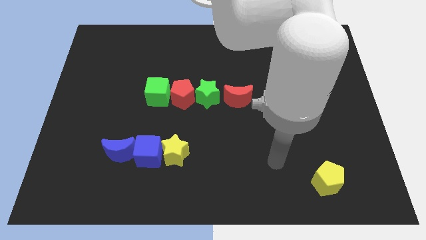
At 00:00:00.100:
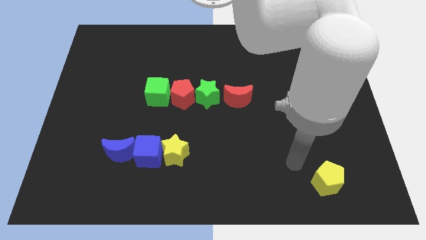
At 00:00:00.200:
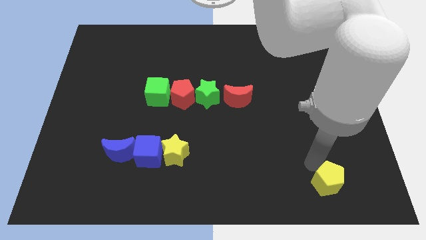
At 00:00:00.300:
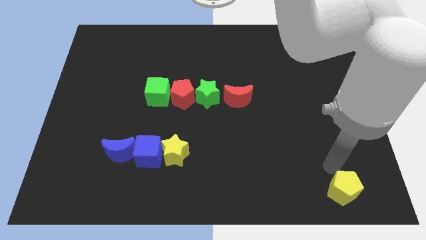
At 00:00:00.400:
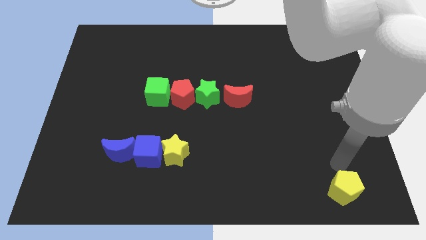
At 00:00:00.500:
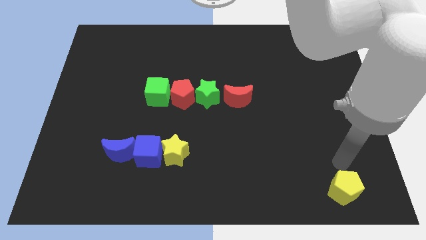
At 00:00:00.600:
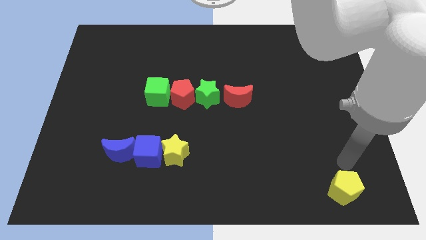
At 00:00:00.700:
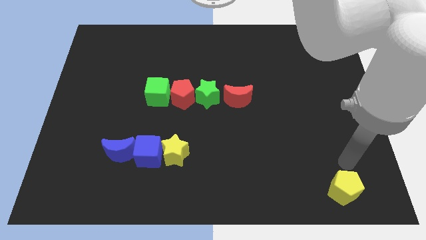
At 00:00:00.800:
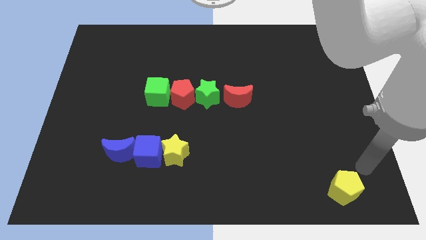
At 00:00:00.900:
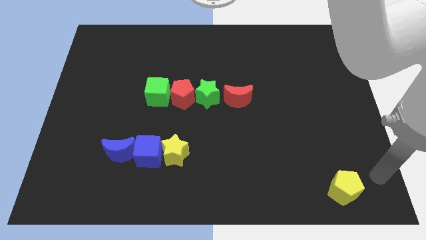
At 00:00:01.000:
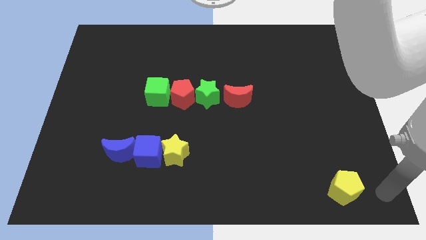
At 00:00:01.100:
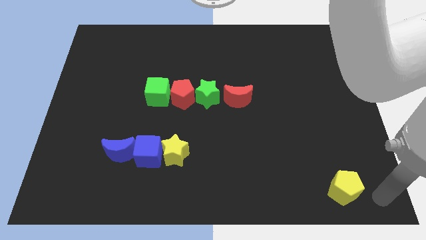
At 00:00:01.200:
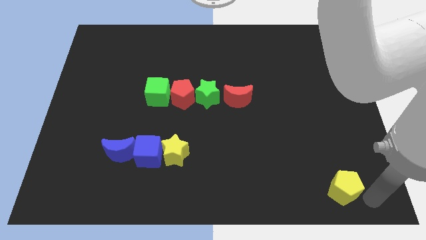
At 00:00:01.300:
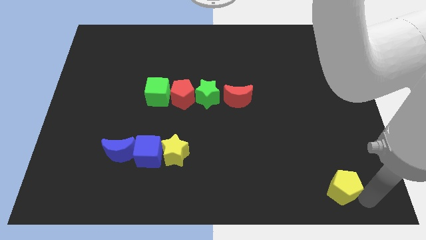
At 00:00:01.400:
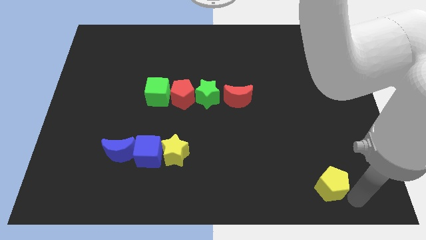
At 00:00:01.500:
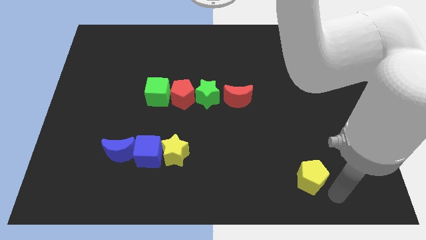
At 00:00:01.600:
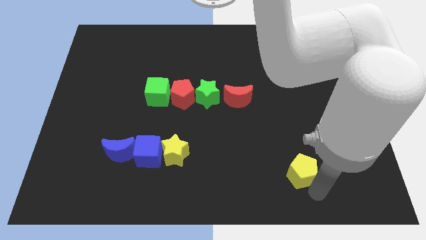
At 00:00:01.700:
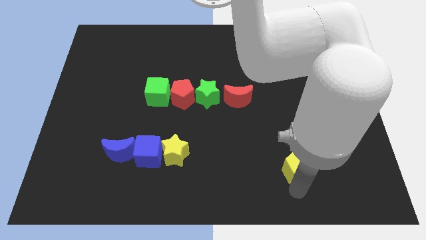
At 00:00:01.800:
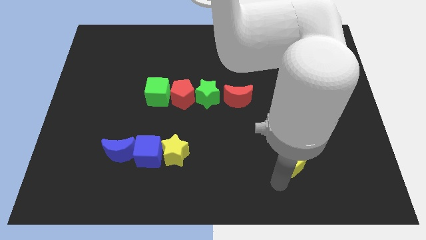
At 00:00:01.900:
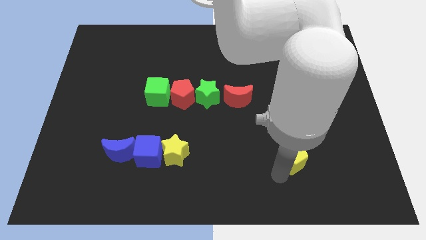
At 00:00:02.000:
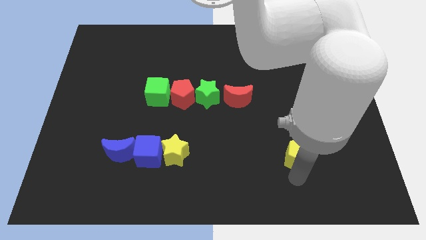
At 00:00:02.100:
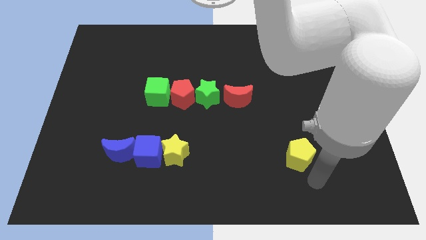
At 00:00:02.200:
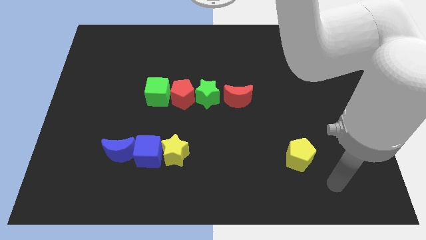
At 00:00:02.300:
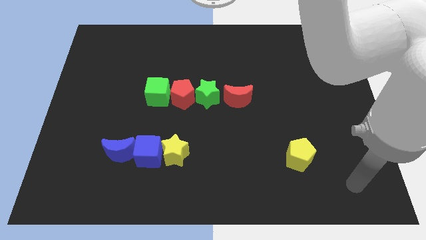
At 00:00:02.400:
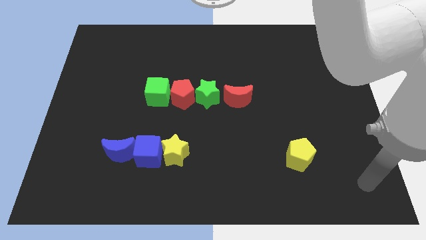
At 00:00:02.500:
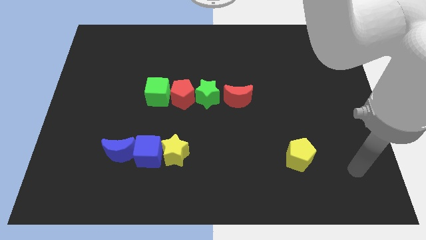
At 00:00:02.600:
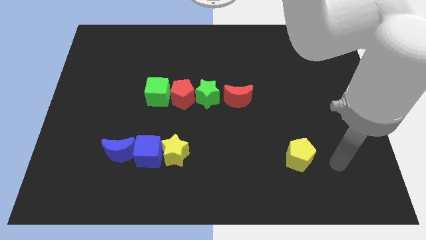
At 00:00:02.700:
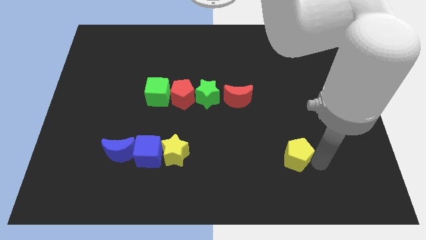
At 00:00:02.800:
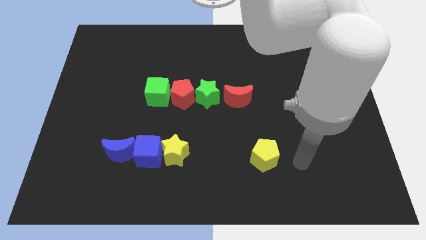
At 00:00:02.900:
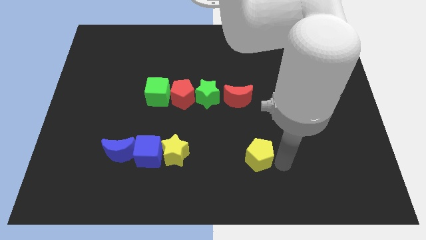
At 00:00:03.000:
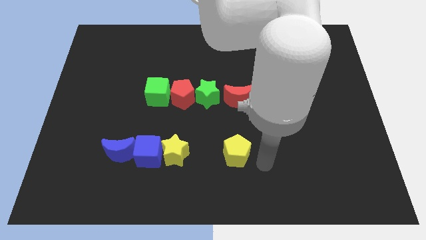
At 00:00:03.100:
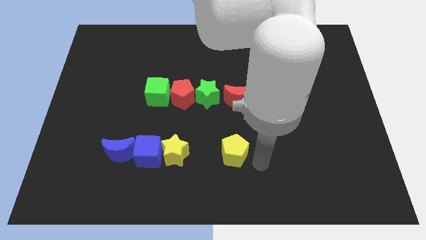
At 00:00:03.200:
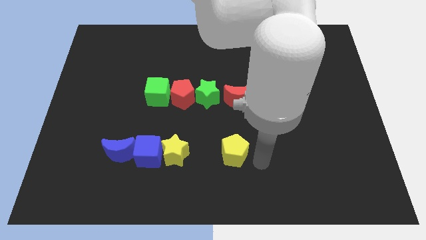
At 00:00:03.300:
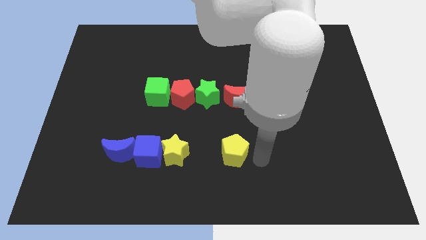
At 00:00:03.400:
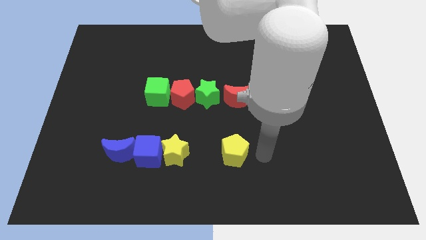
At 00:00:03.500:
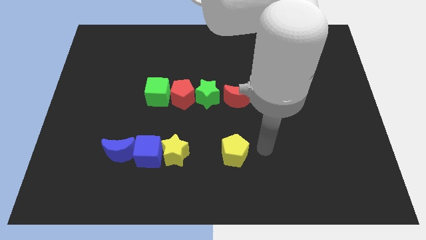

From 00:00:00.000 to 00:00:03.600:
move the yellow pentagon parallel to the yellow star

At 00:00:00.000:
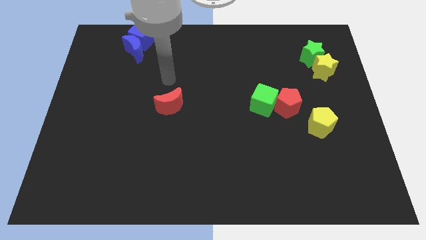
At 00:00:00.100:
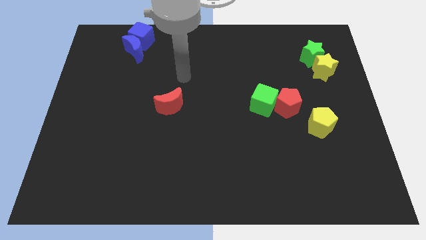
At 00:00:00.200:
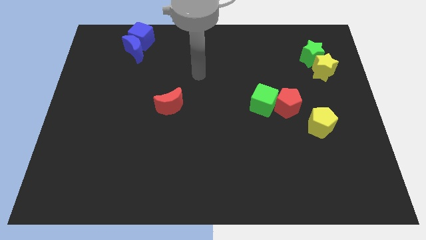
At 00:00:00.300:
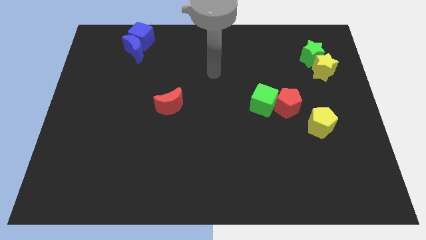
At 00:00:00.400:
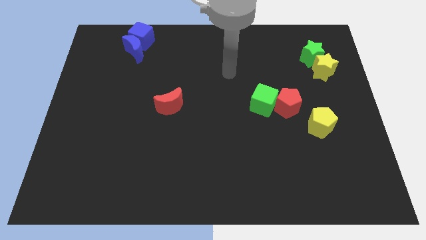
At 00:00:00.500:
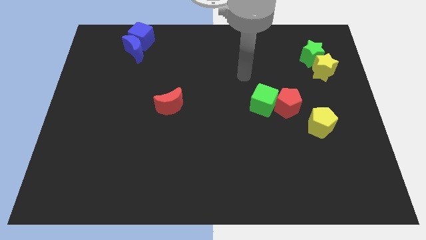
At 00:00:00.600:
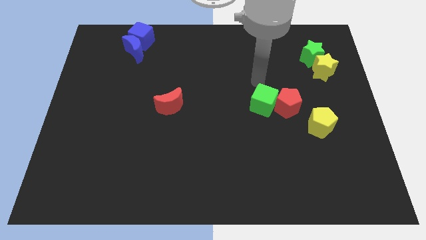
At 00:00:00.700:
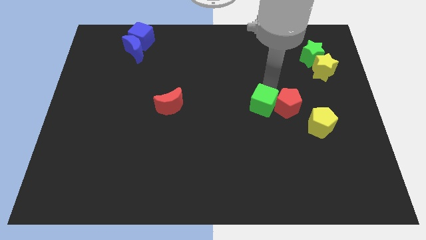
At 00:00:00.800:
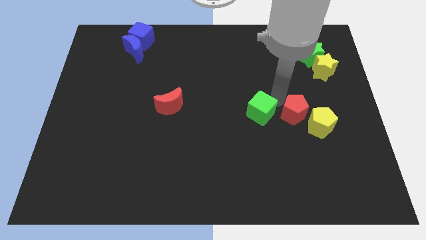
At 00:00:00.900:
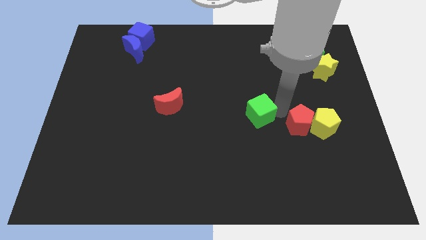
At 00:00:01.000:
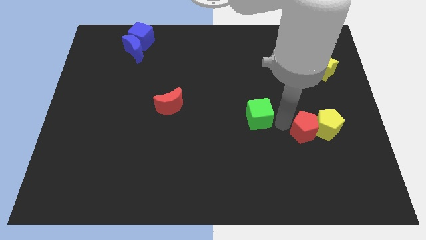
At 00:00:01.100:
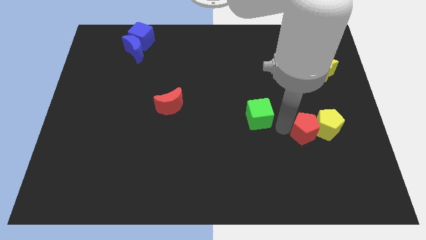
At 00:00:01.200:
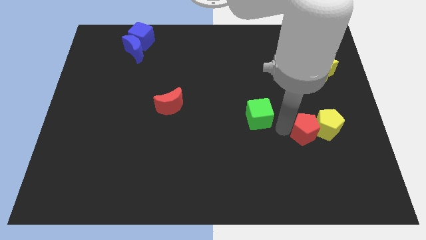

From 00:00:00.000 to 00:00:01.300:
separate green cube and red pentagon

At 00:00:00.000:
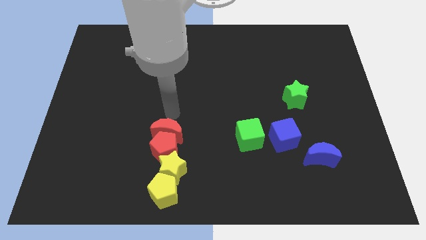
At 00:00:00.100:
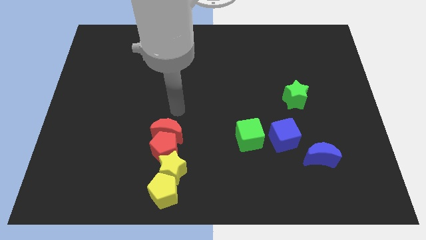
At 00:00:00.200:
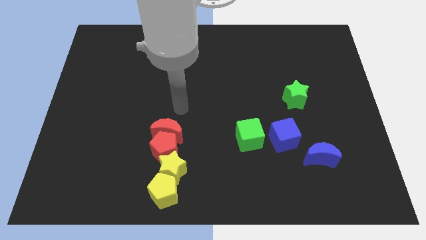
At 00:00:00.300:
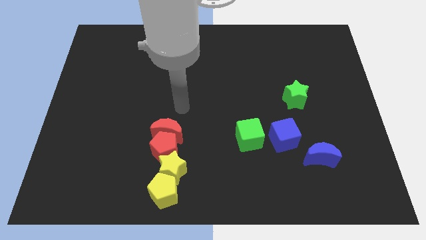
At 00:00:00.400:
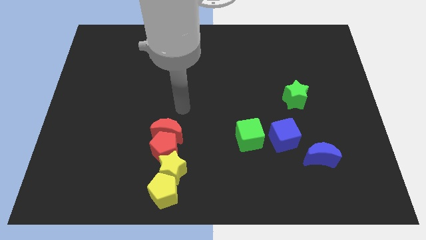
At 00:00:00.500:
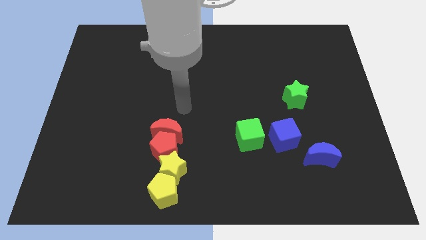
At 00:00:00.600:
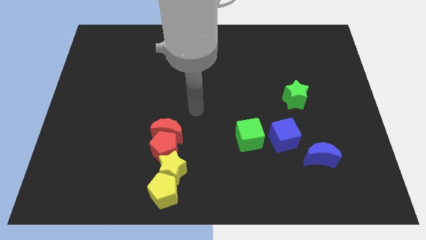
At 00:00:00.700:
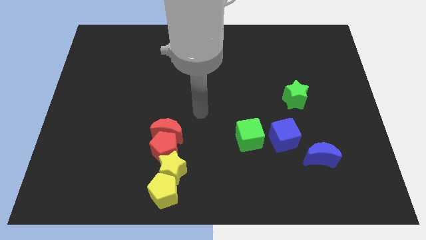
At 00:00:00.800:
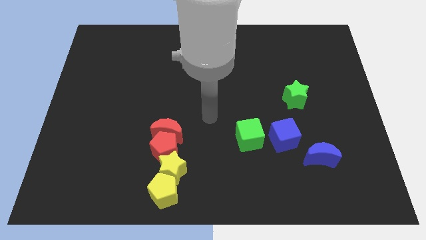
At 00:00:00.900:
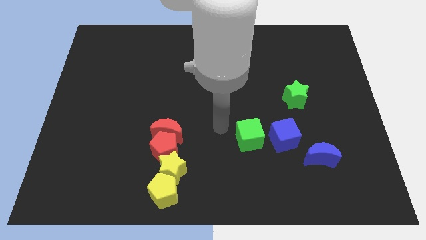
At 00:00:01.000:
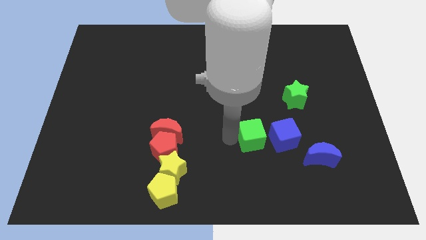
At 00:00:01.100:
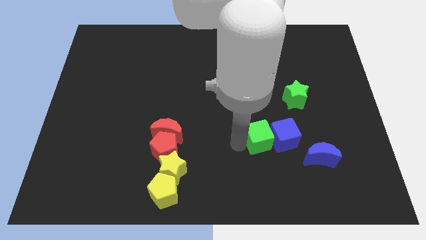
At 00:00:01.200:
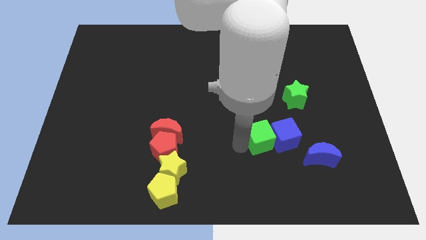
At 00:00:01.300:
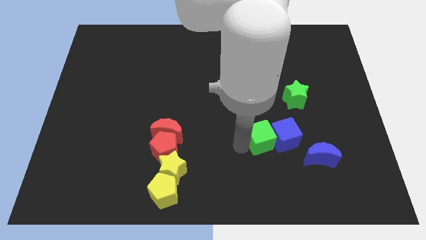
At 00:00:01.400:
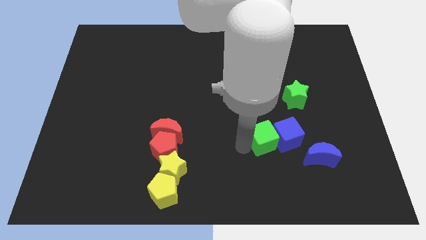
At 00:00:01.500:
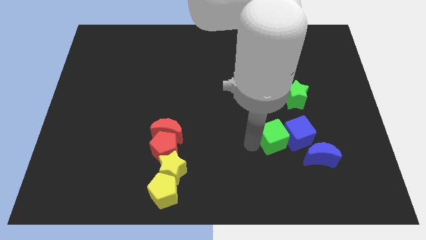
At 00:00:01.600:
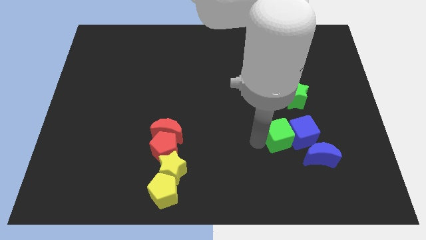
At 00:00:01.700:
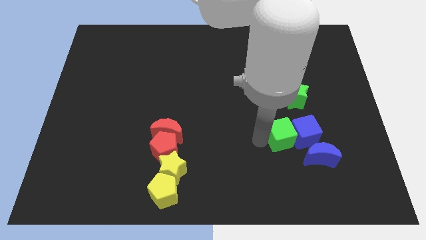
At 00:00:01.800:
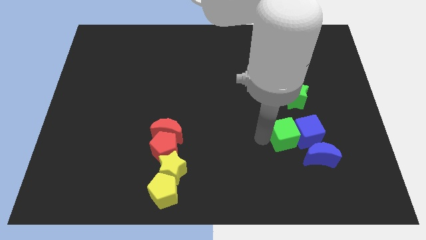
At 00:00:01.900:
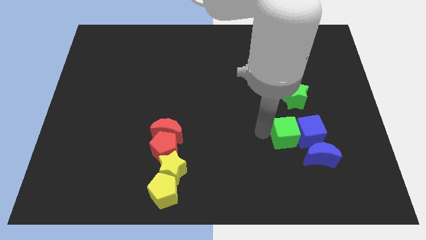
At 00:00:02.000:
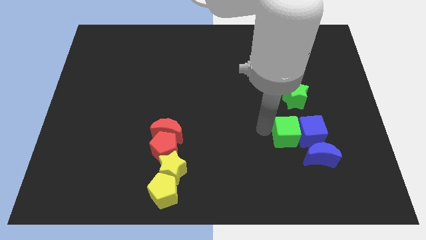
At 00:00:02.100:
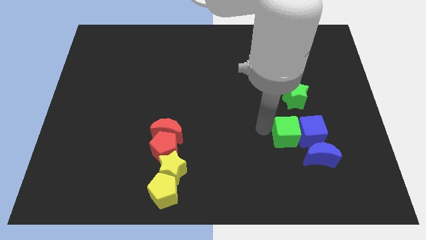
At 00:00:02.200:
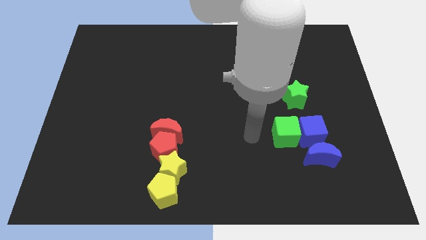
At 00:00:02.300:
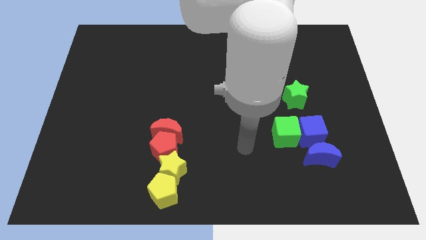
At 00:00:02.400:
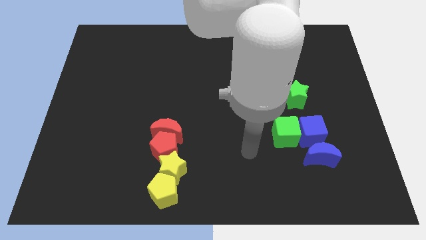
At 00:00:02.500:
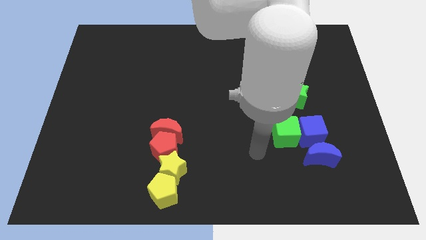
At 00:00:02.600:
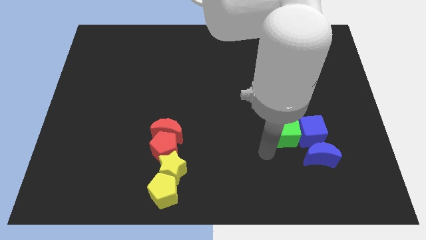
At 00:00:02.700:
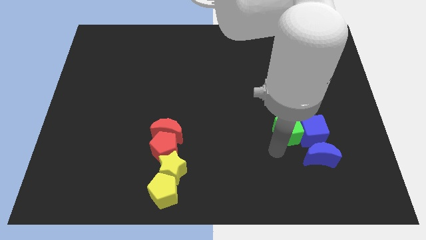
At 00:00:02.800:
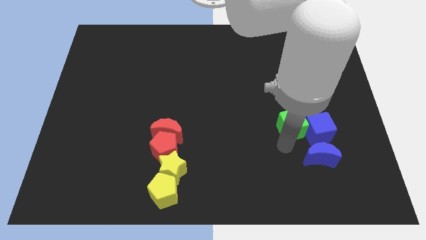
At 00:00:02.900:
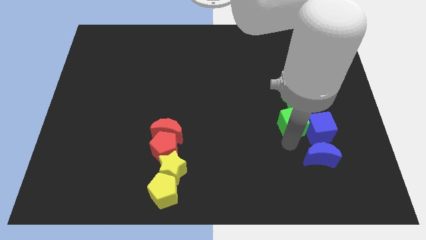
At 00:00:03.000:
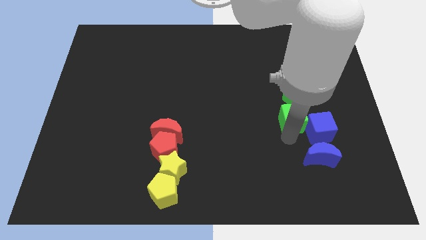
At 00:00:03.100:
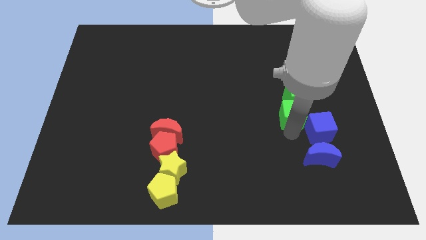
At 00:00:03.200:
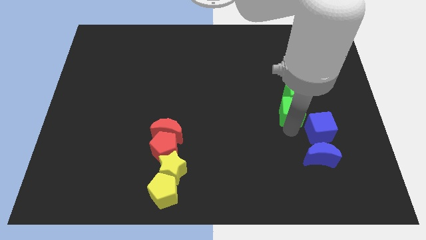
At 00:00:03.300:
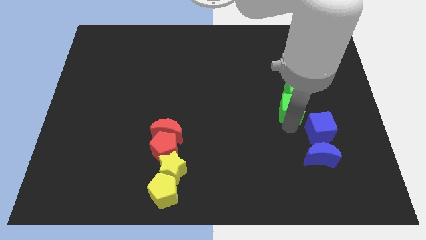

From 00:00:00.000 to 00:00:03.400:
push the green cube into the blue cube

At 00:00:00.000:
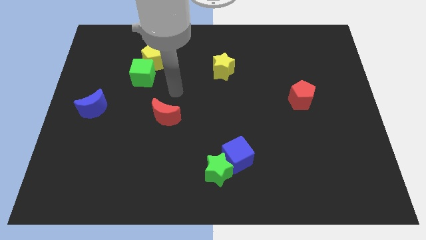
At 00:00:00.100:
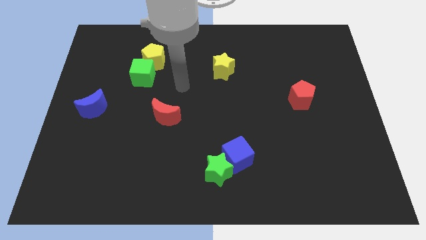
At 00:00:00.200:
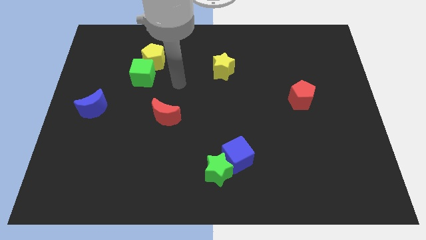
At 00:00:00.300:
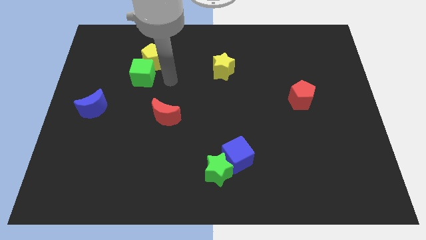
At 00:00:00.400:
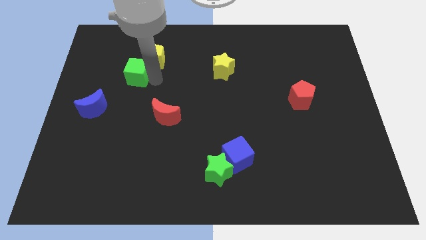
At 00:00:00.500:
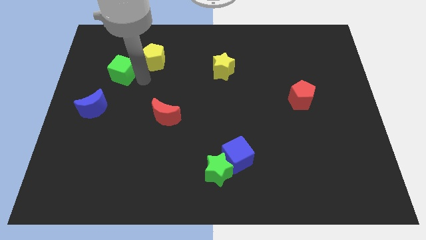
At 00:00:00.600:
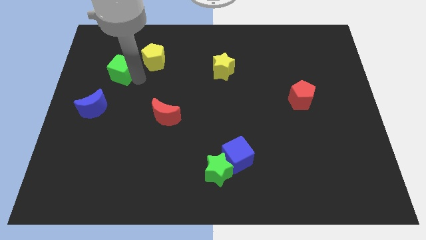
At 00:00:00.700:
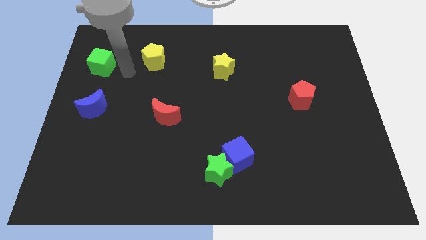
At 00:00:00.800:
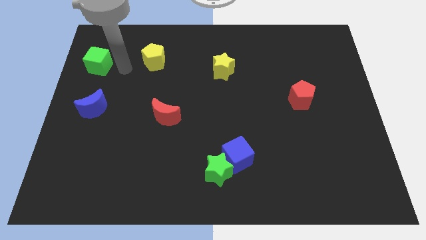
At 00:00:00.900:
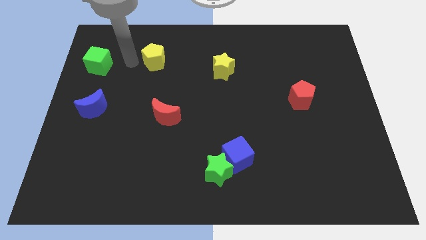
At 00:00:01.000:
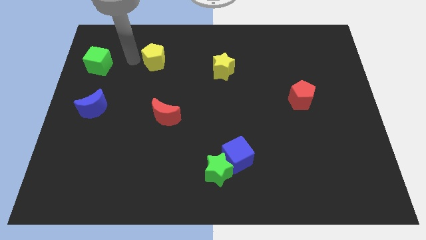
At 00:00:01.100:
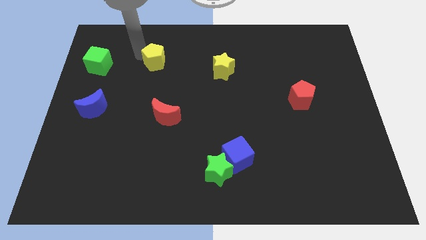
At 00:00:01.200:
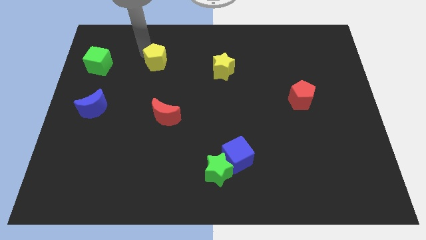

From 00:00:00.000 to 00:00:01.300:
move the green cube to the vertical top of the blue moon
